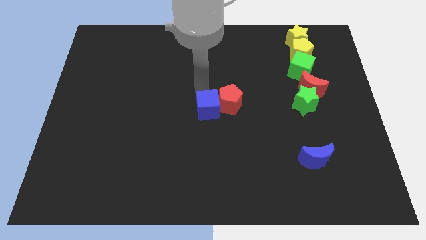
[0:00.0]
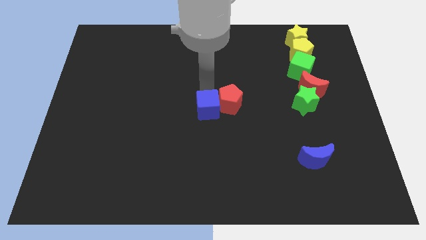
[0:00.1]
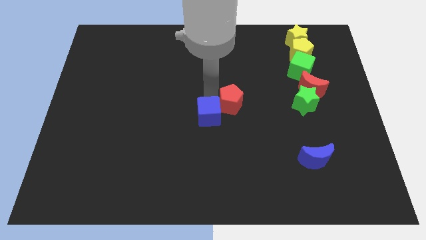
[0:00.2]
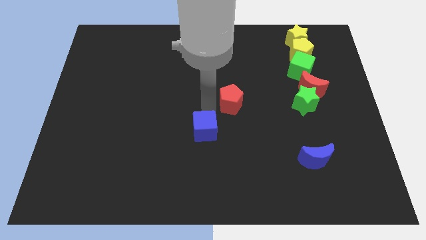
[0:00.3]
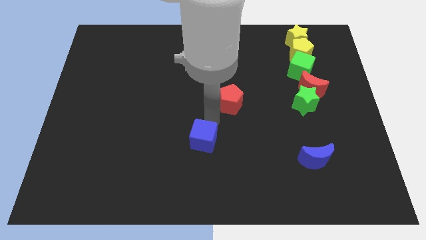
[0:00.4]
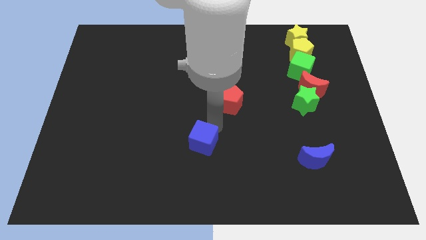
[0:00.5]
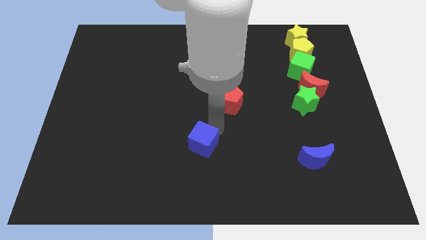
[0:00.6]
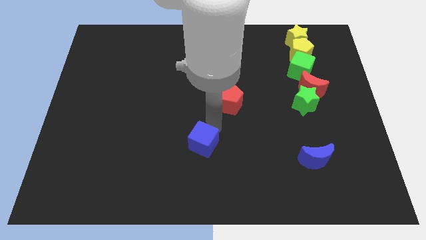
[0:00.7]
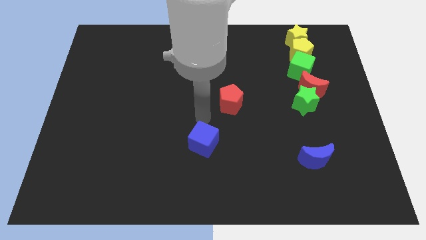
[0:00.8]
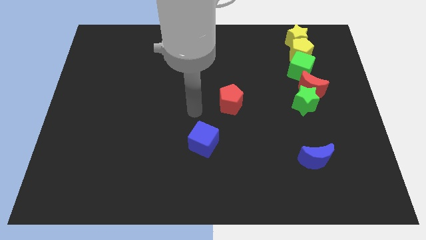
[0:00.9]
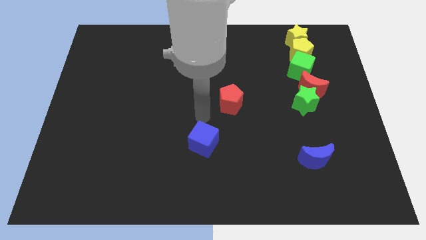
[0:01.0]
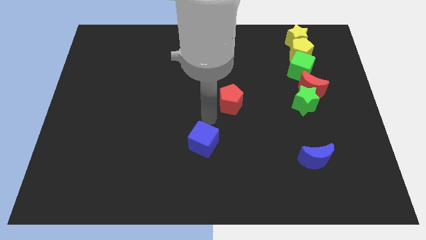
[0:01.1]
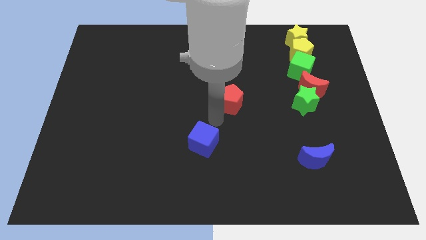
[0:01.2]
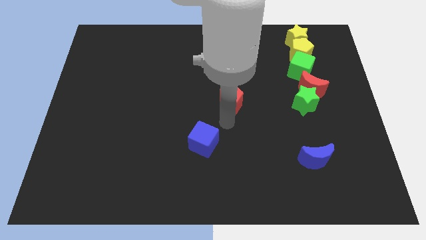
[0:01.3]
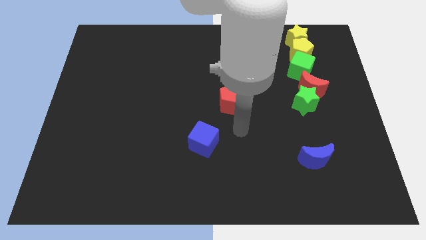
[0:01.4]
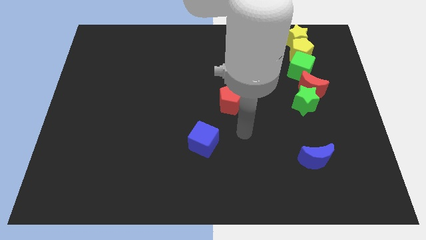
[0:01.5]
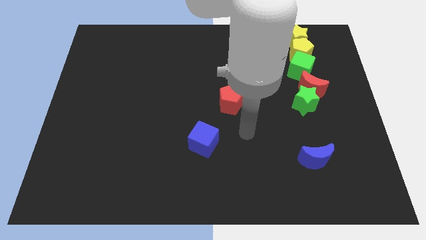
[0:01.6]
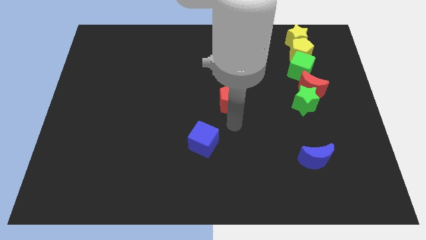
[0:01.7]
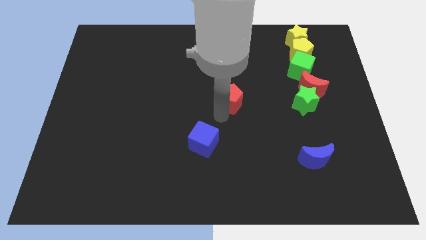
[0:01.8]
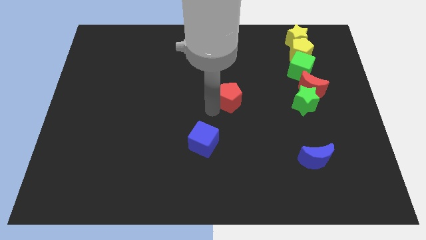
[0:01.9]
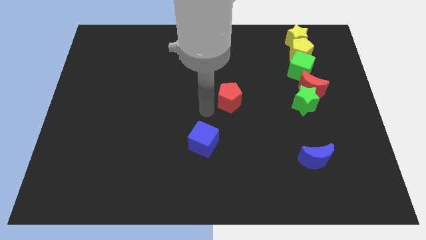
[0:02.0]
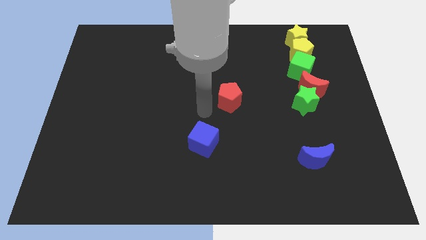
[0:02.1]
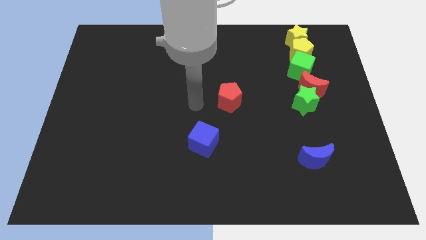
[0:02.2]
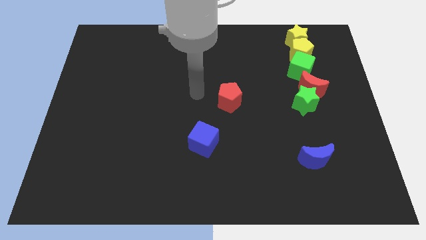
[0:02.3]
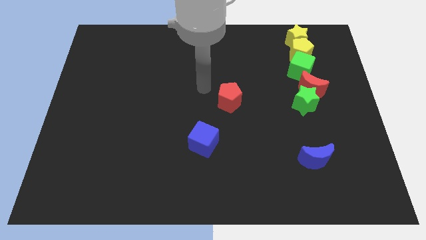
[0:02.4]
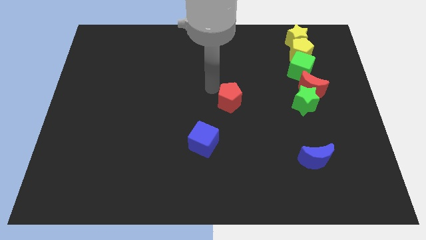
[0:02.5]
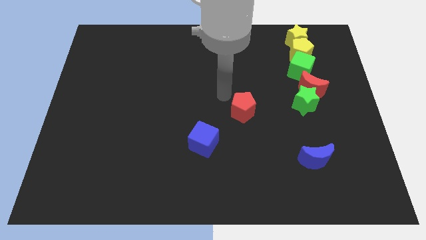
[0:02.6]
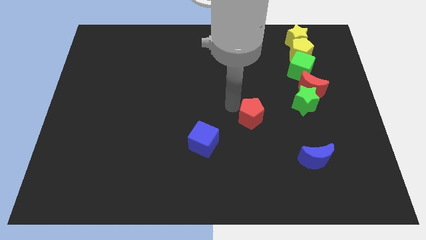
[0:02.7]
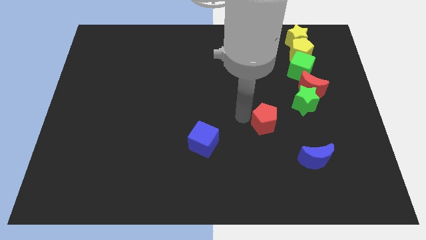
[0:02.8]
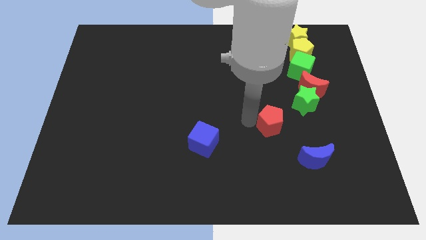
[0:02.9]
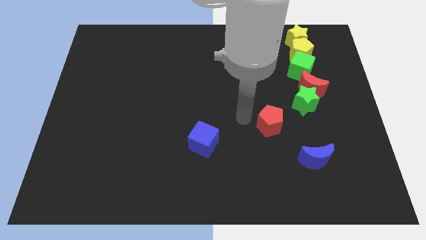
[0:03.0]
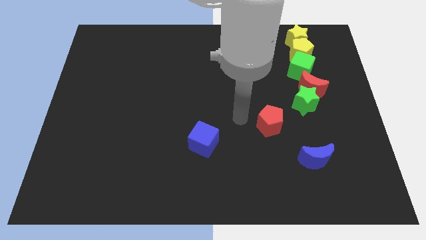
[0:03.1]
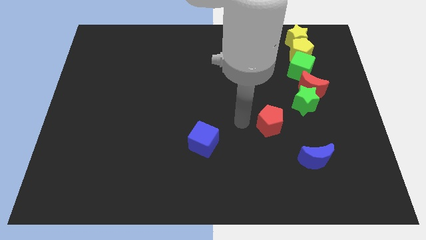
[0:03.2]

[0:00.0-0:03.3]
separate blue cube and the red pentagon

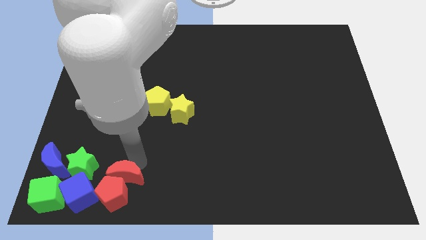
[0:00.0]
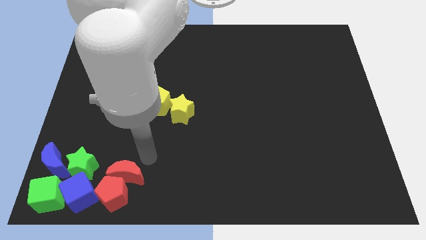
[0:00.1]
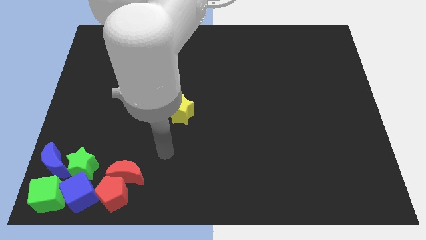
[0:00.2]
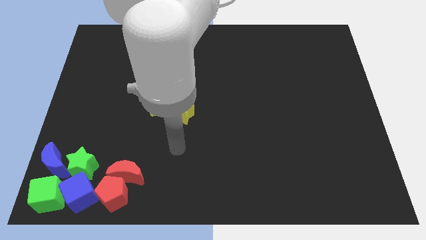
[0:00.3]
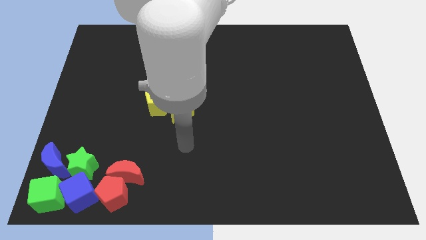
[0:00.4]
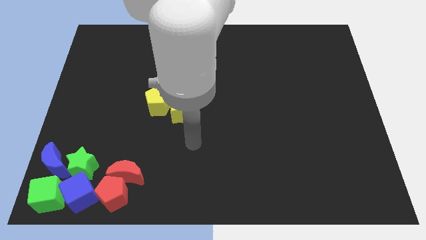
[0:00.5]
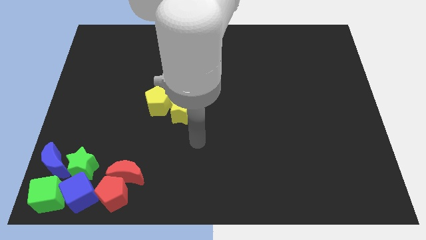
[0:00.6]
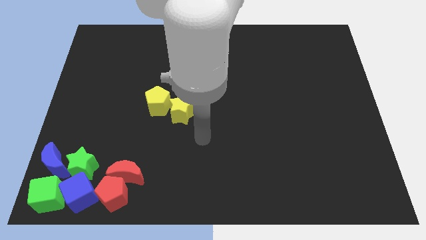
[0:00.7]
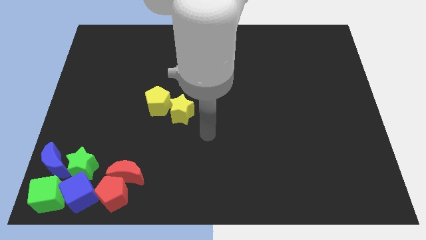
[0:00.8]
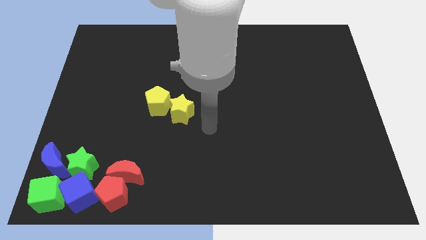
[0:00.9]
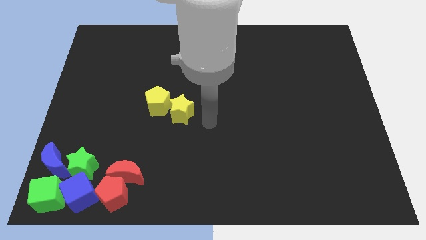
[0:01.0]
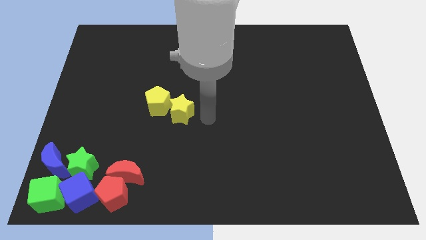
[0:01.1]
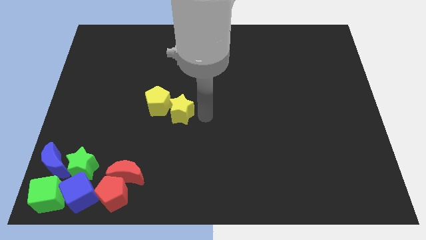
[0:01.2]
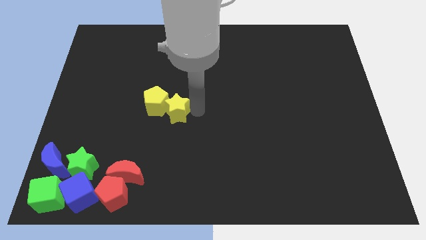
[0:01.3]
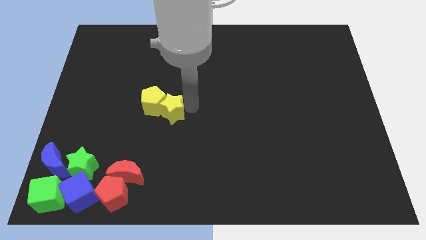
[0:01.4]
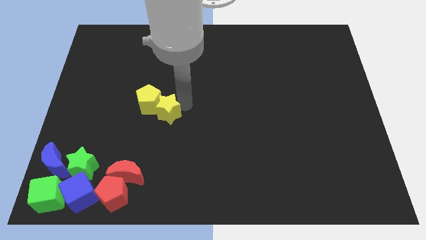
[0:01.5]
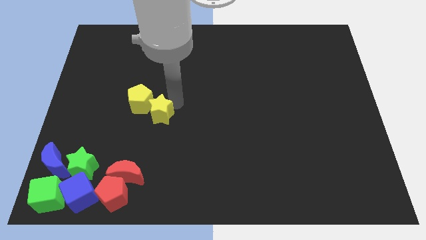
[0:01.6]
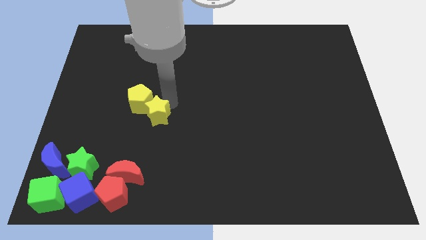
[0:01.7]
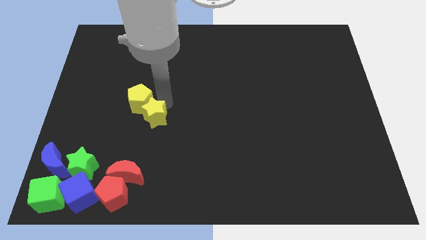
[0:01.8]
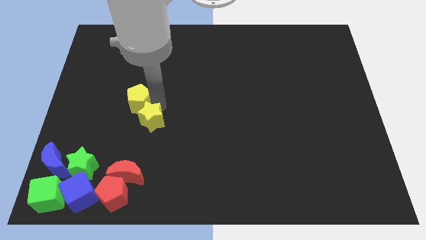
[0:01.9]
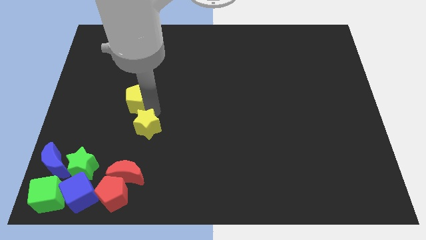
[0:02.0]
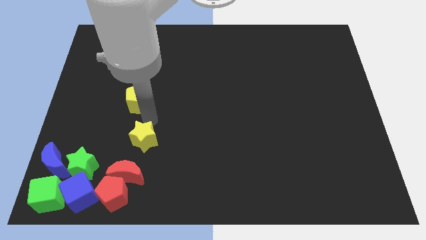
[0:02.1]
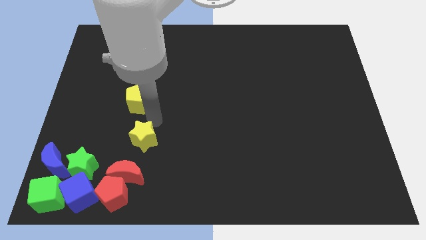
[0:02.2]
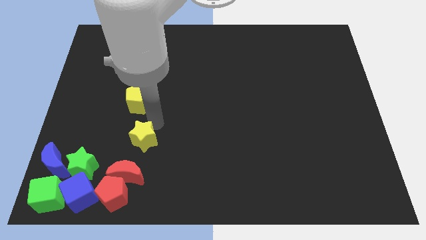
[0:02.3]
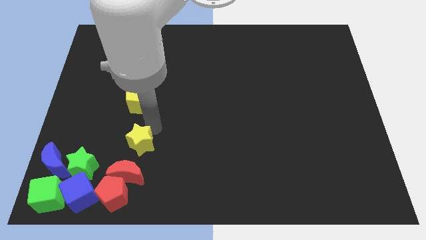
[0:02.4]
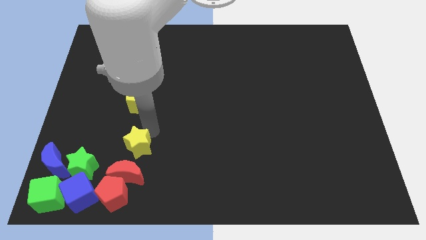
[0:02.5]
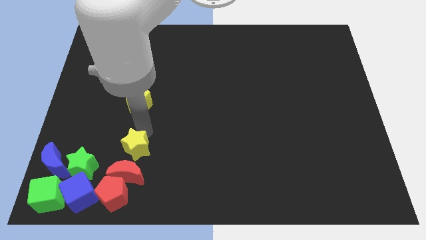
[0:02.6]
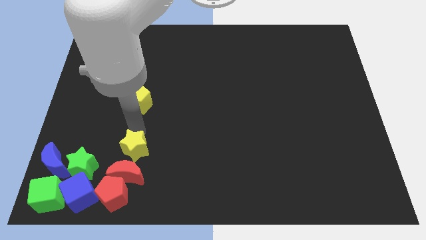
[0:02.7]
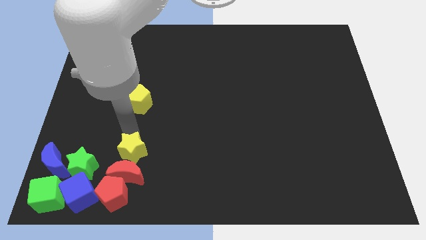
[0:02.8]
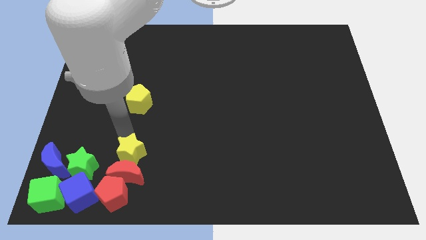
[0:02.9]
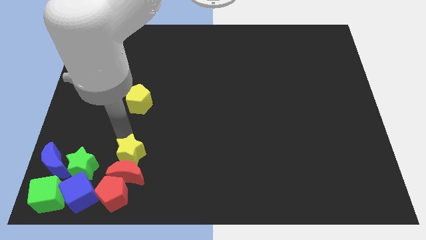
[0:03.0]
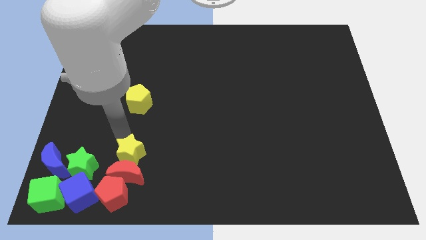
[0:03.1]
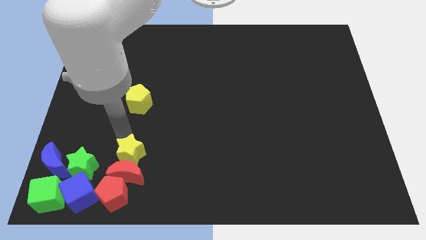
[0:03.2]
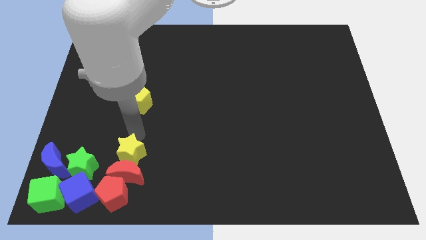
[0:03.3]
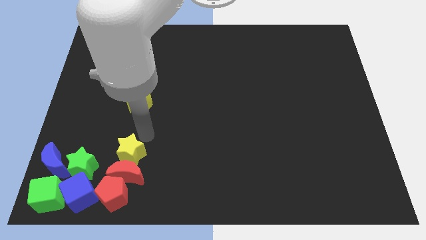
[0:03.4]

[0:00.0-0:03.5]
push the yellow star vertically below the yellow pentagon

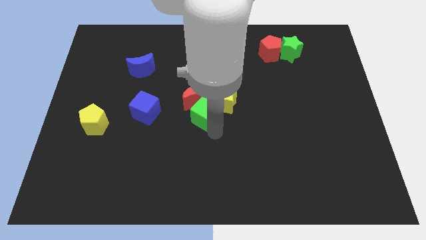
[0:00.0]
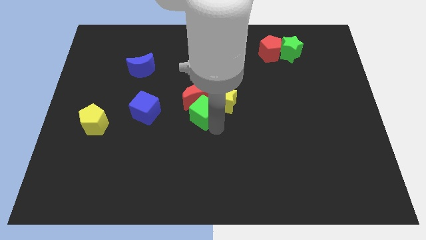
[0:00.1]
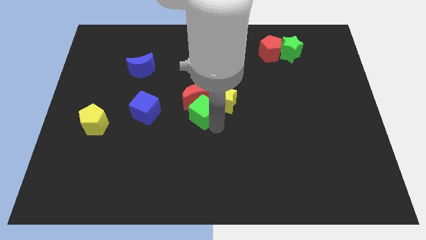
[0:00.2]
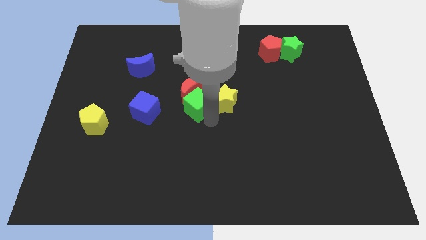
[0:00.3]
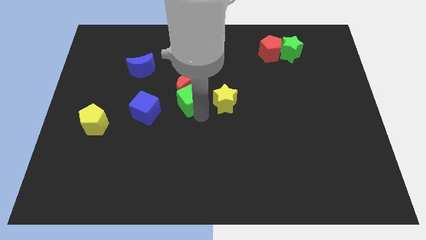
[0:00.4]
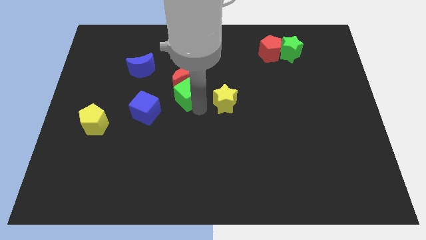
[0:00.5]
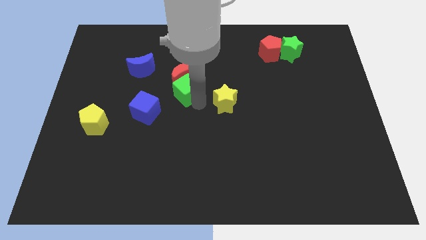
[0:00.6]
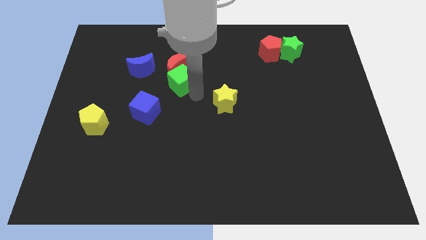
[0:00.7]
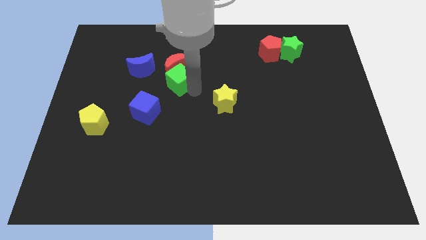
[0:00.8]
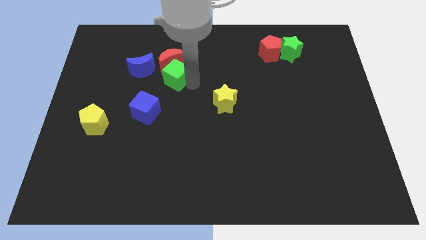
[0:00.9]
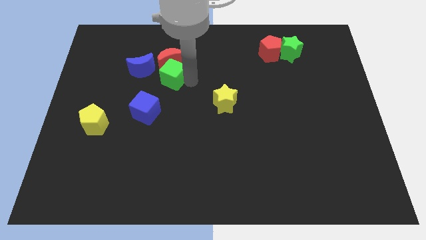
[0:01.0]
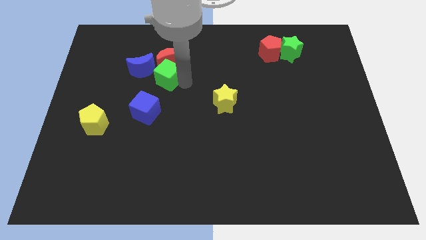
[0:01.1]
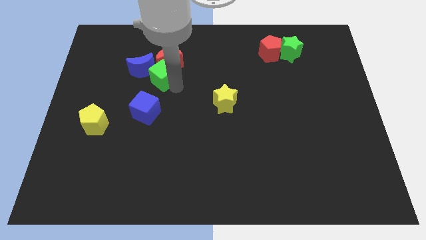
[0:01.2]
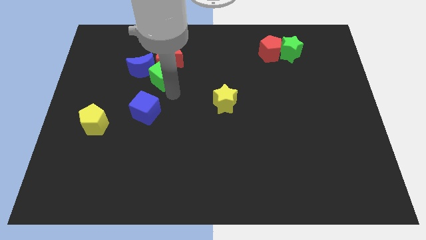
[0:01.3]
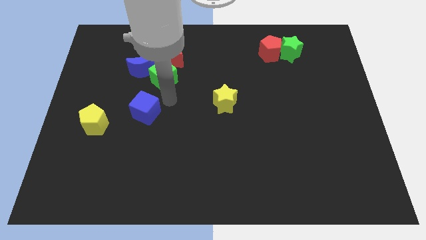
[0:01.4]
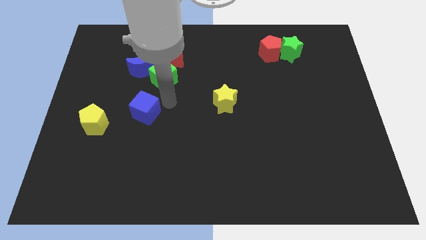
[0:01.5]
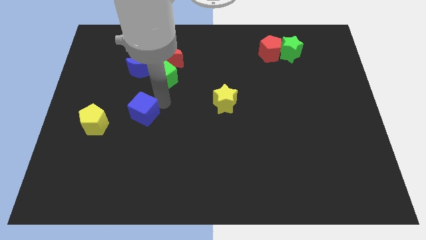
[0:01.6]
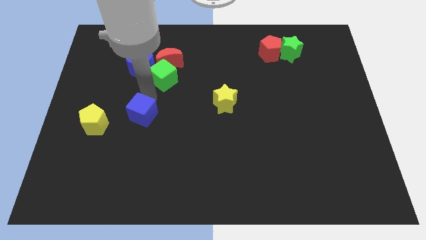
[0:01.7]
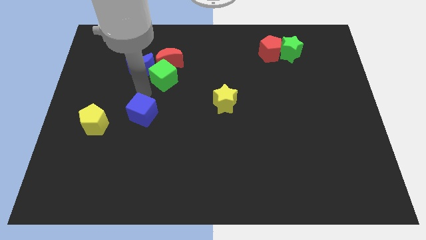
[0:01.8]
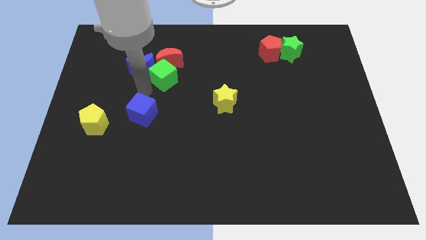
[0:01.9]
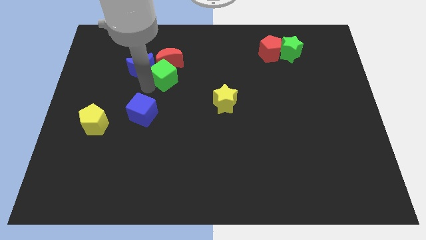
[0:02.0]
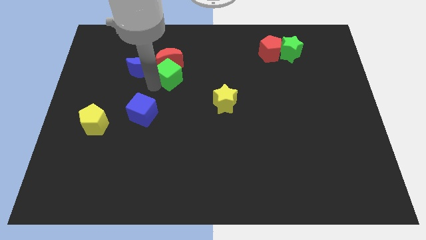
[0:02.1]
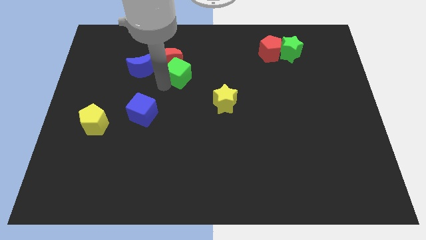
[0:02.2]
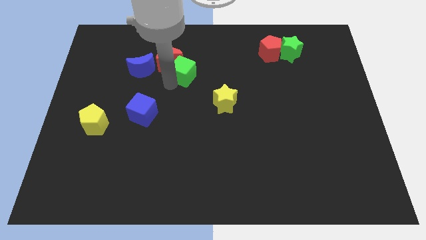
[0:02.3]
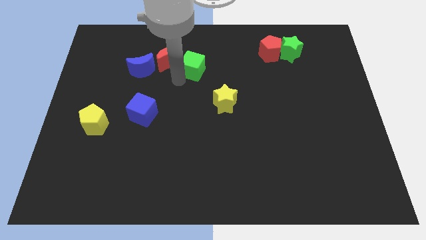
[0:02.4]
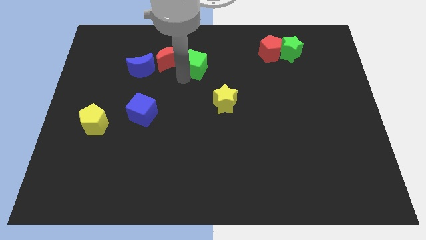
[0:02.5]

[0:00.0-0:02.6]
push the red moon with a green cube diagonally up
